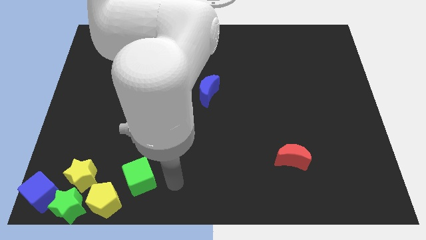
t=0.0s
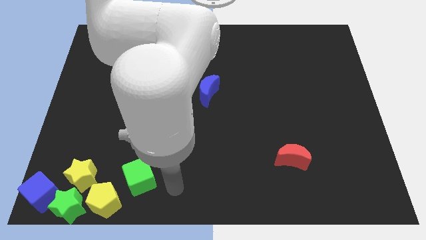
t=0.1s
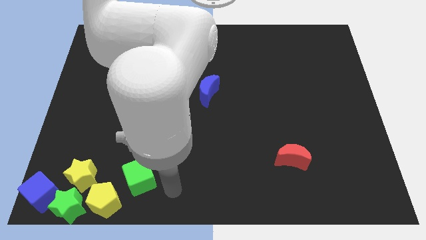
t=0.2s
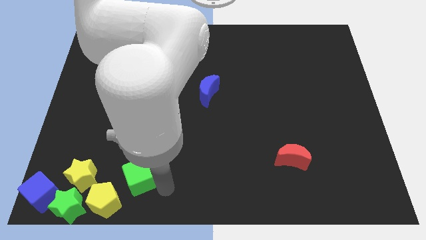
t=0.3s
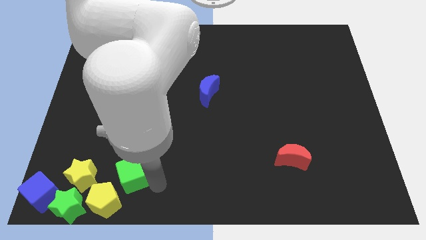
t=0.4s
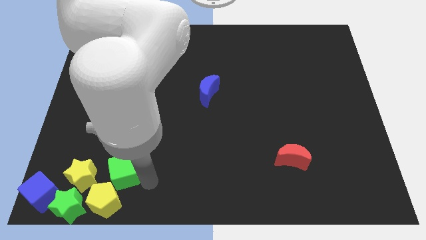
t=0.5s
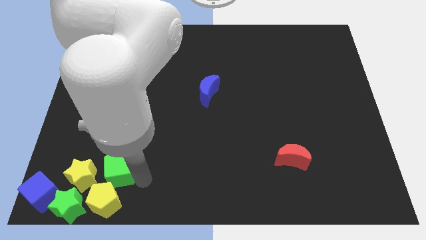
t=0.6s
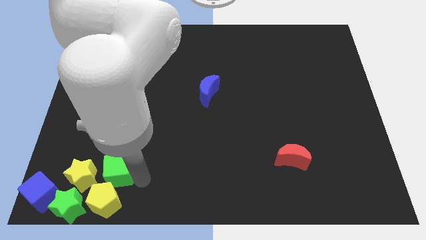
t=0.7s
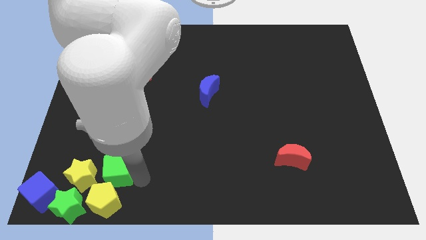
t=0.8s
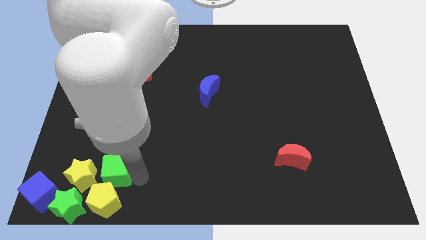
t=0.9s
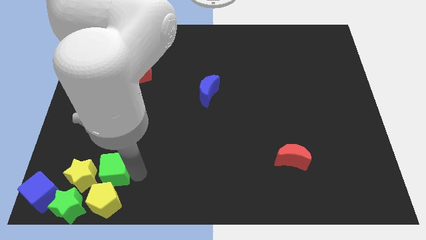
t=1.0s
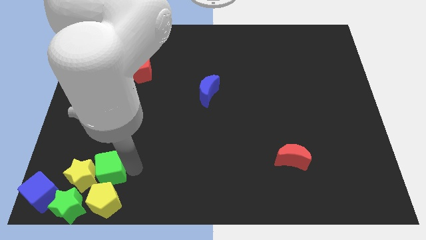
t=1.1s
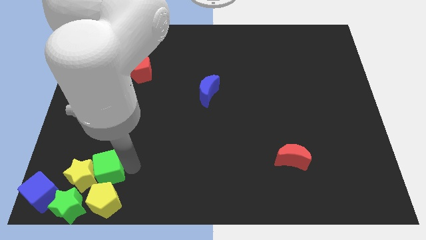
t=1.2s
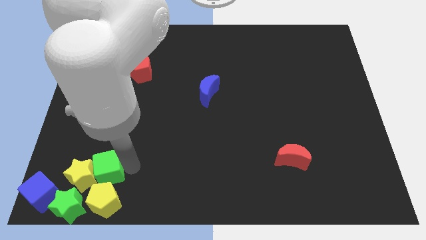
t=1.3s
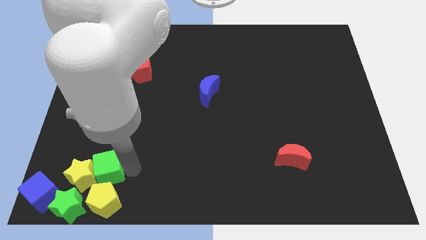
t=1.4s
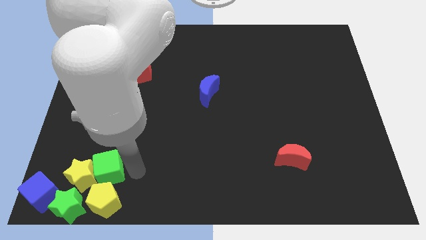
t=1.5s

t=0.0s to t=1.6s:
place the green cube above to the yellow pentagon

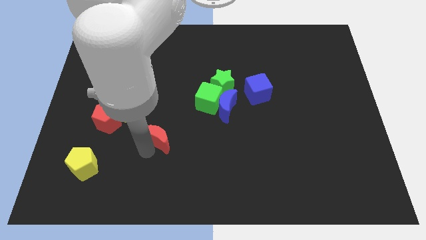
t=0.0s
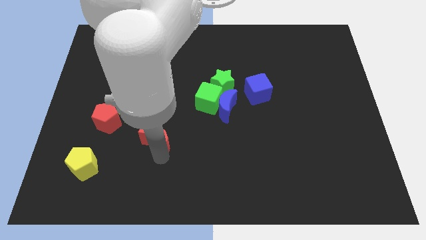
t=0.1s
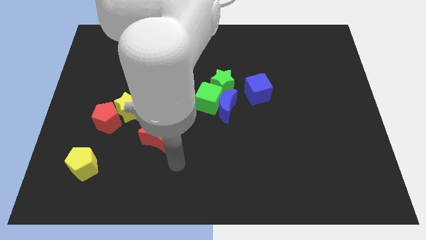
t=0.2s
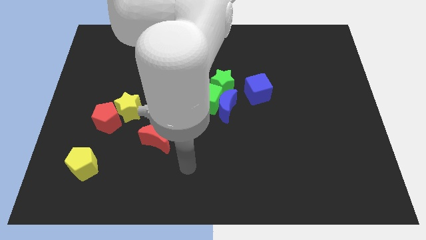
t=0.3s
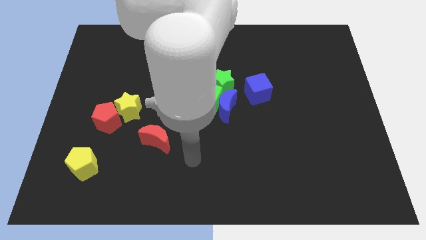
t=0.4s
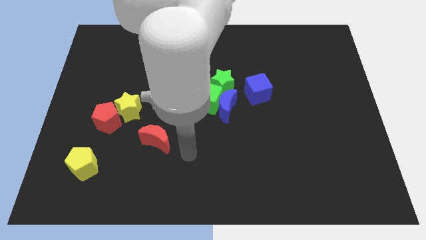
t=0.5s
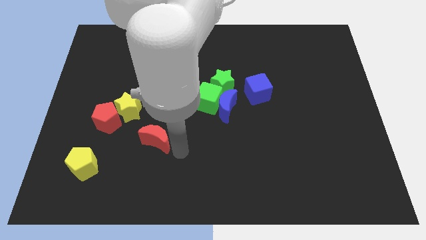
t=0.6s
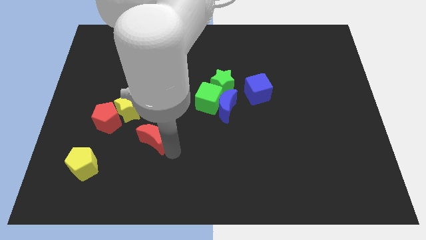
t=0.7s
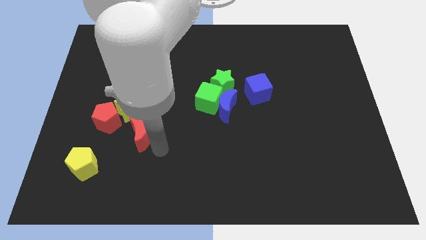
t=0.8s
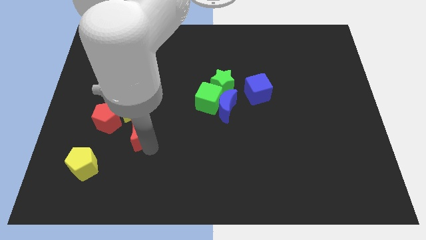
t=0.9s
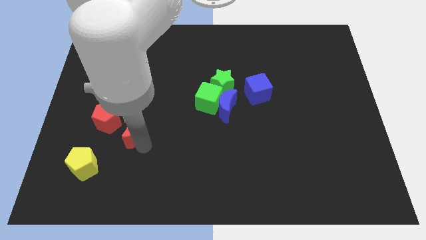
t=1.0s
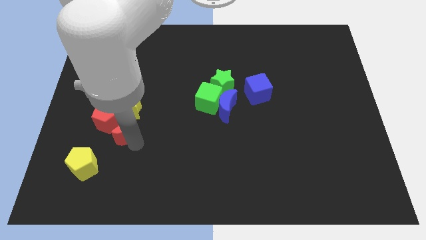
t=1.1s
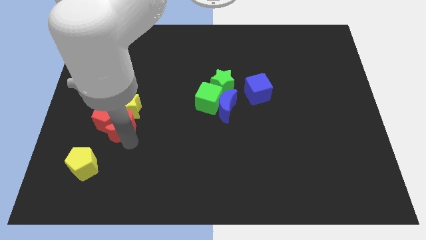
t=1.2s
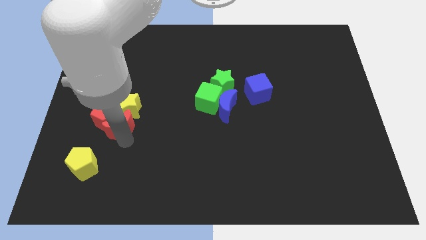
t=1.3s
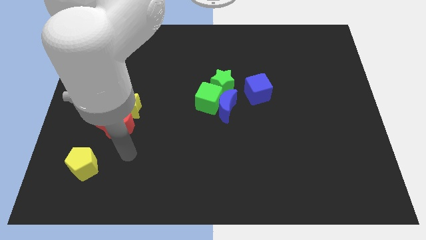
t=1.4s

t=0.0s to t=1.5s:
place the red moon below the red pentagon

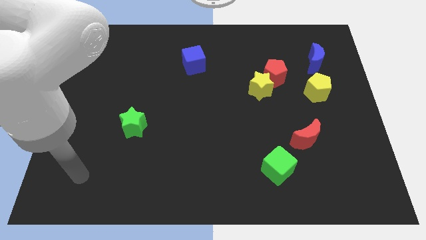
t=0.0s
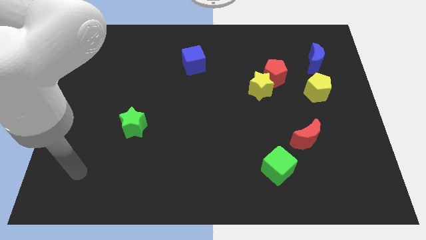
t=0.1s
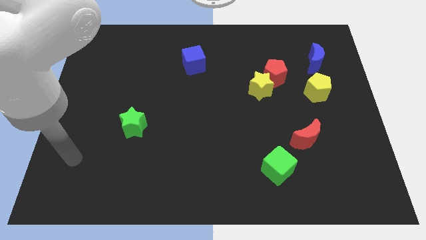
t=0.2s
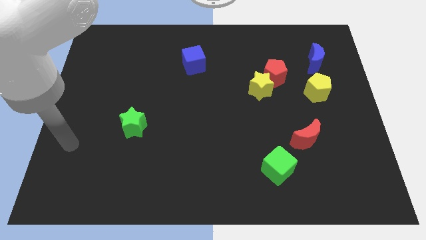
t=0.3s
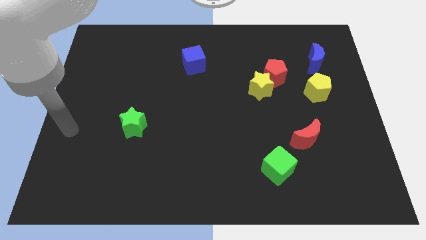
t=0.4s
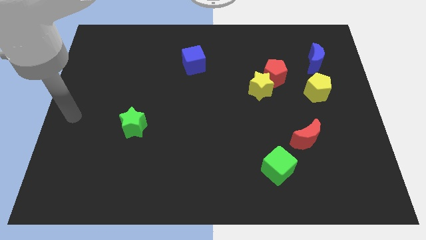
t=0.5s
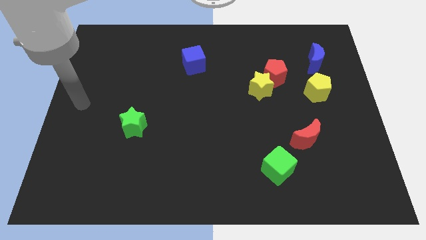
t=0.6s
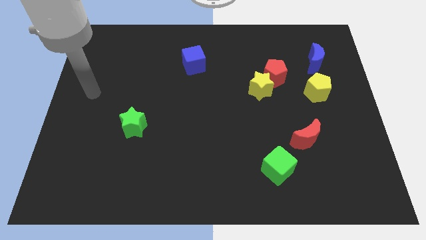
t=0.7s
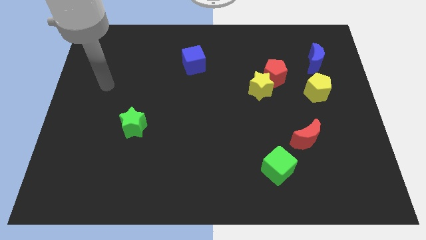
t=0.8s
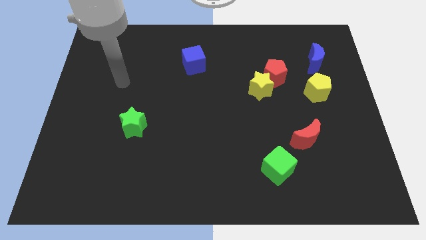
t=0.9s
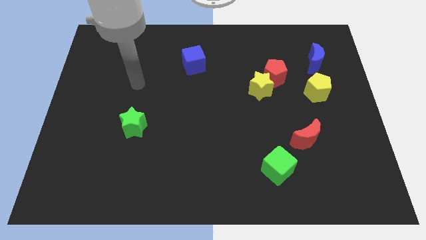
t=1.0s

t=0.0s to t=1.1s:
move your hand above the green star

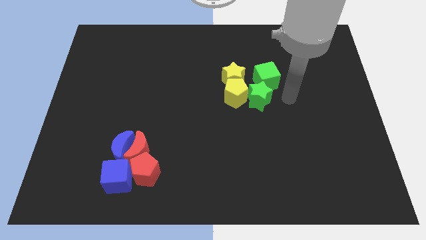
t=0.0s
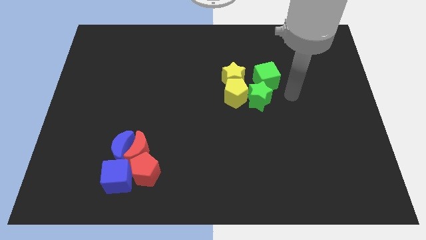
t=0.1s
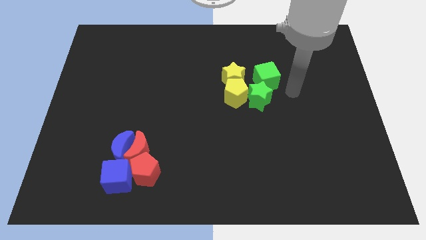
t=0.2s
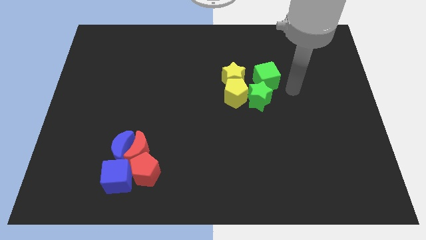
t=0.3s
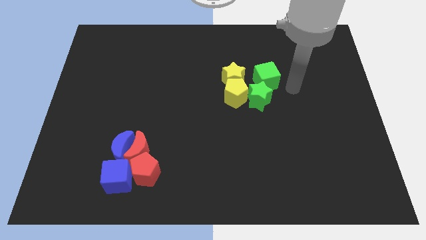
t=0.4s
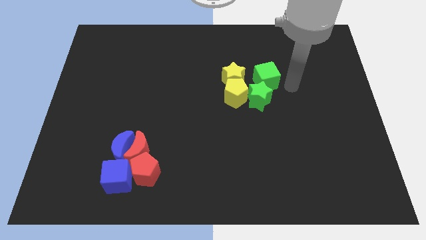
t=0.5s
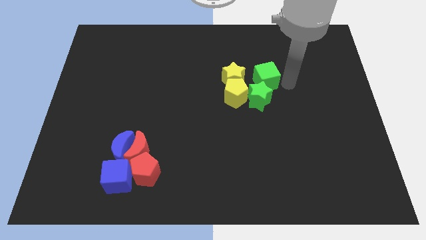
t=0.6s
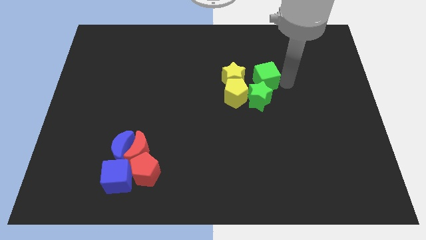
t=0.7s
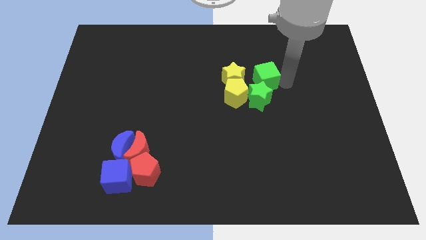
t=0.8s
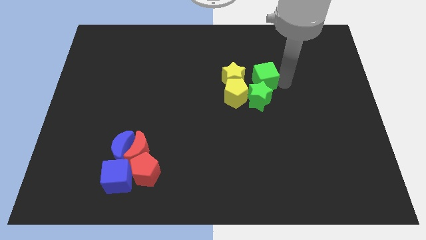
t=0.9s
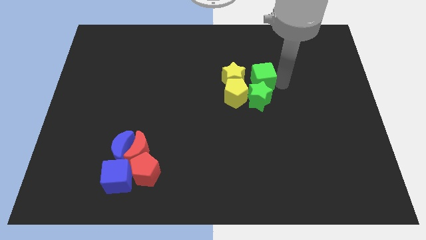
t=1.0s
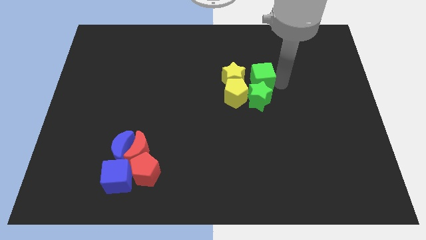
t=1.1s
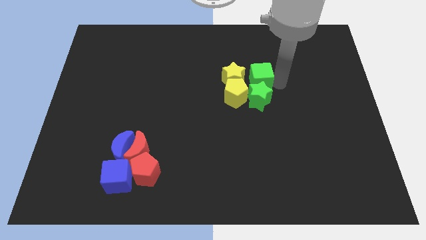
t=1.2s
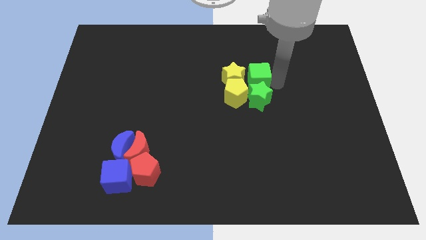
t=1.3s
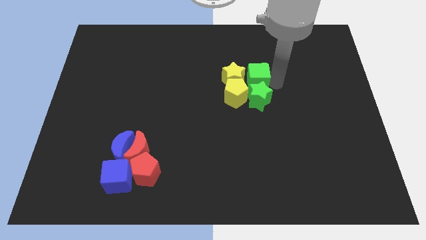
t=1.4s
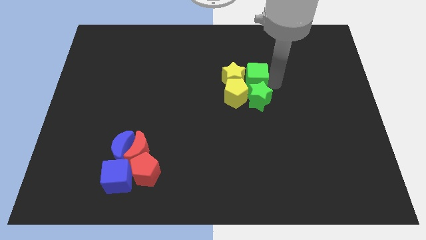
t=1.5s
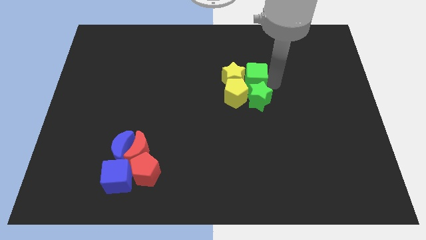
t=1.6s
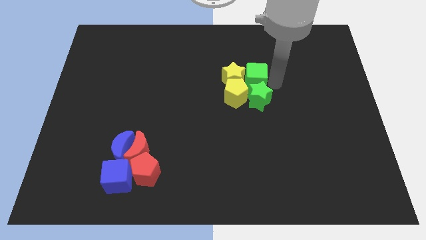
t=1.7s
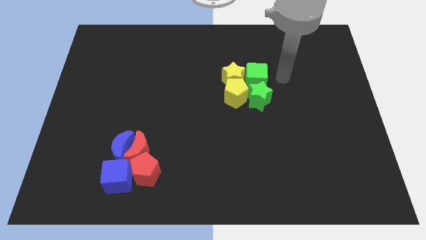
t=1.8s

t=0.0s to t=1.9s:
push the green cube close to the right of the yellow star

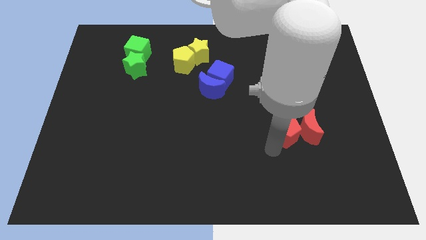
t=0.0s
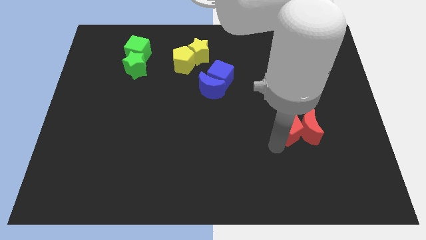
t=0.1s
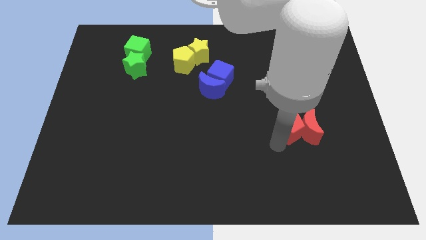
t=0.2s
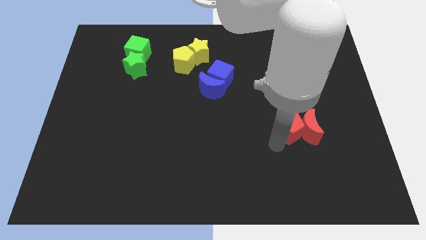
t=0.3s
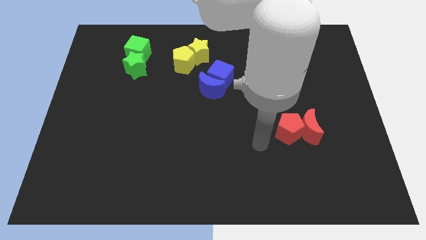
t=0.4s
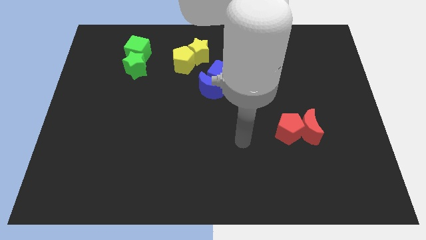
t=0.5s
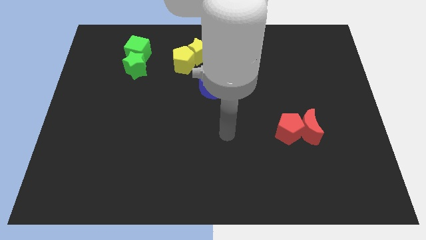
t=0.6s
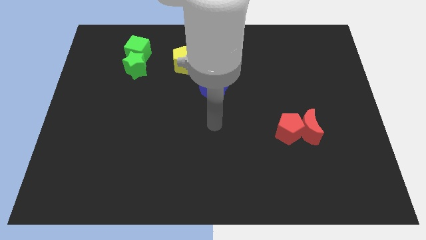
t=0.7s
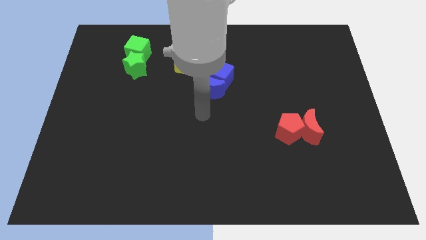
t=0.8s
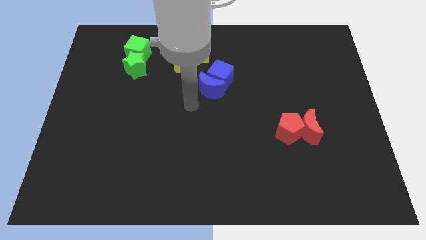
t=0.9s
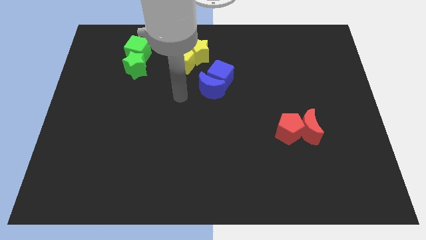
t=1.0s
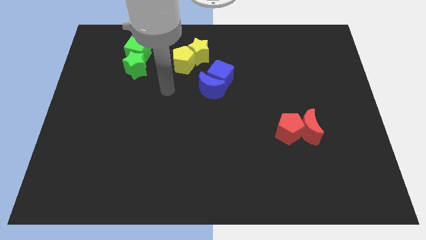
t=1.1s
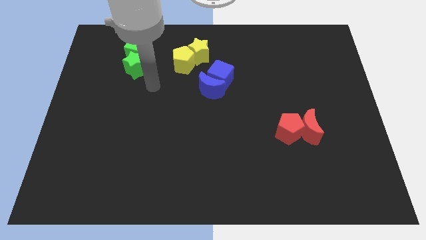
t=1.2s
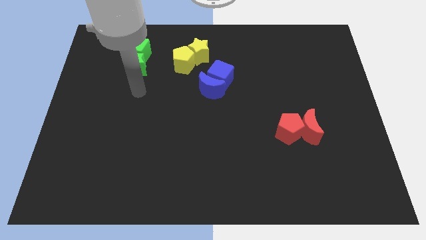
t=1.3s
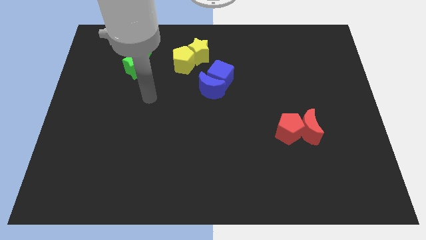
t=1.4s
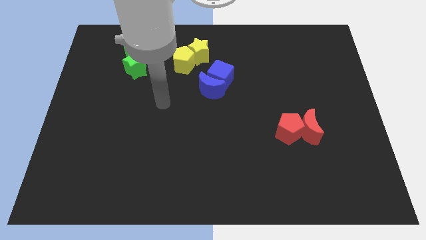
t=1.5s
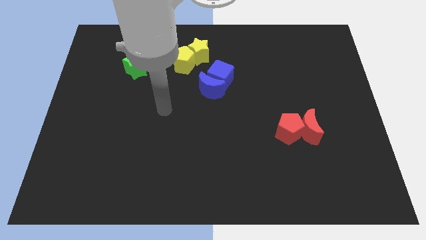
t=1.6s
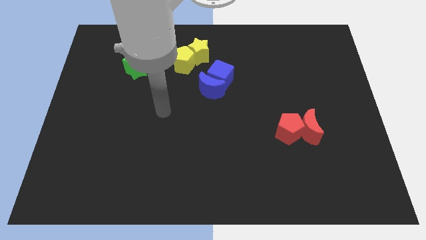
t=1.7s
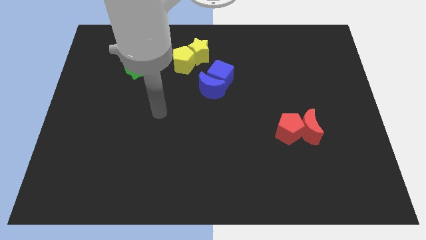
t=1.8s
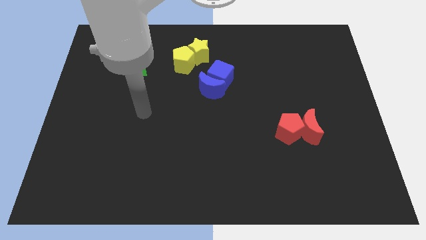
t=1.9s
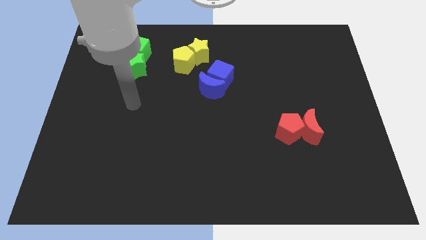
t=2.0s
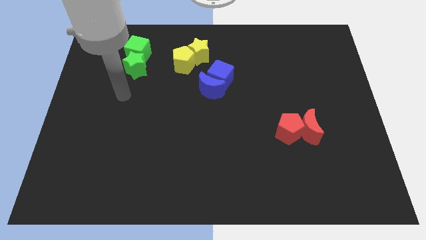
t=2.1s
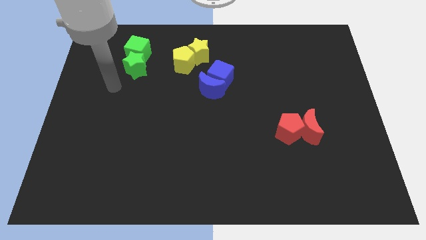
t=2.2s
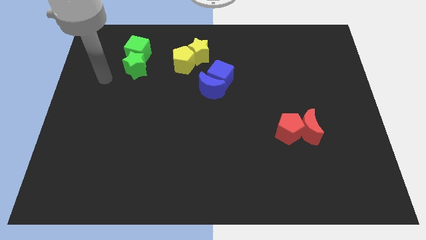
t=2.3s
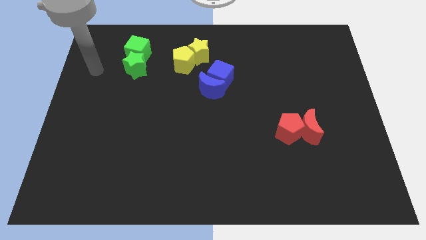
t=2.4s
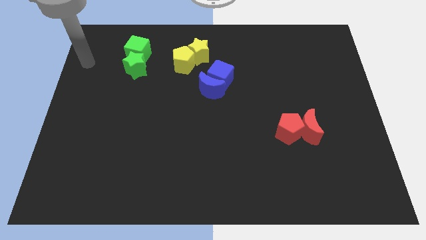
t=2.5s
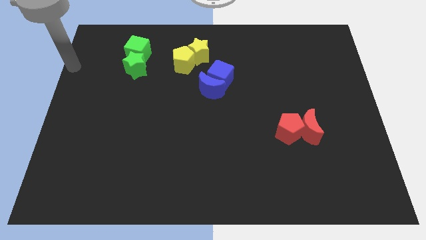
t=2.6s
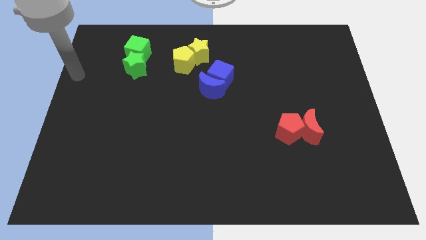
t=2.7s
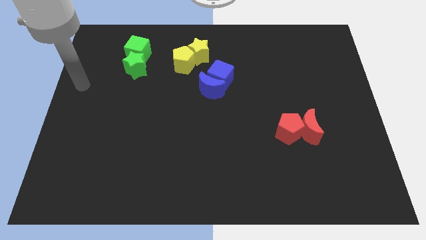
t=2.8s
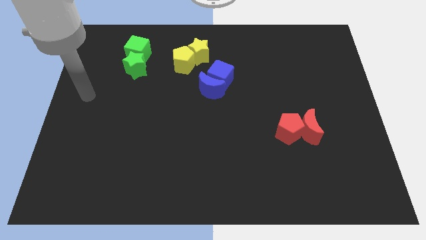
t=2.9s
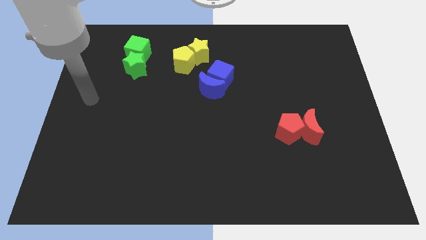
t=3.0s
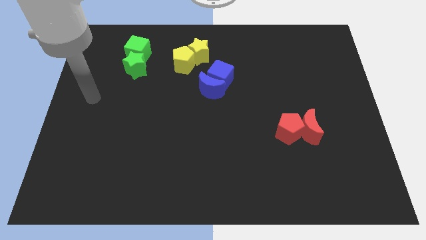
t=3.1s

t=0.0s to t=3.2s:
place your arm at the left side of the board
